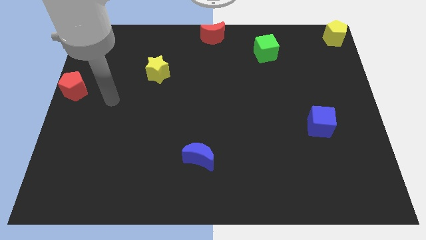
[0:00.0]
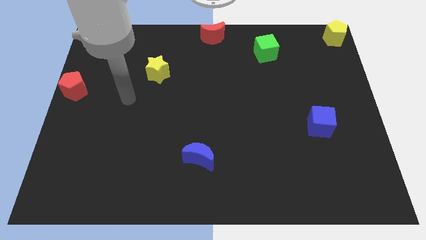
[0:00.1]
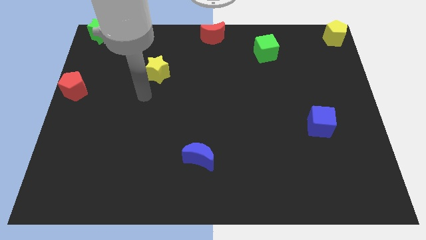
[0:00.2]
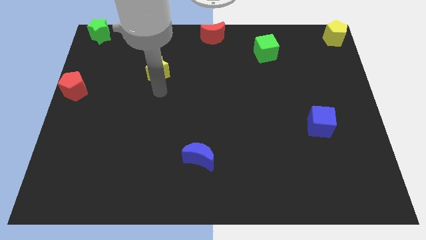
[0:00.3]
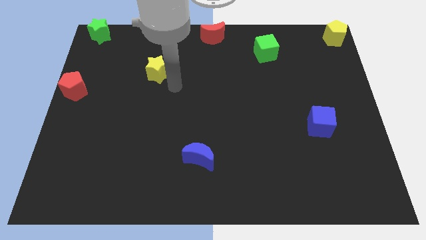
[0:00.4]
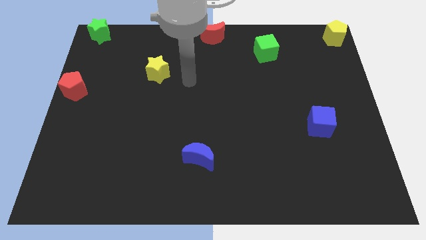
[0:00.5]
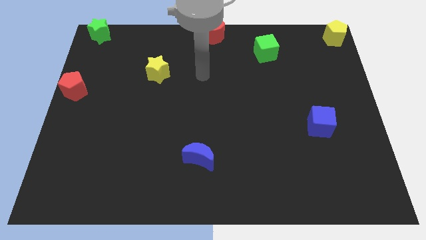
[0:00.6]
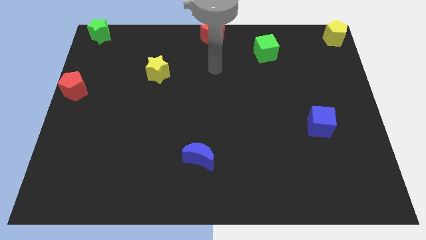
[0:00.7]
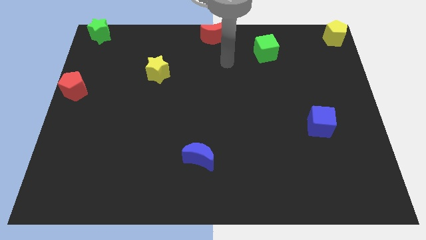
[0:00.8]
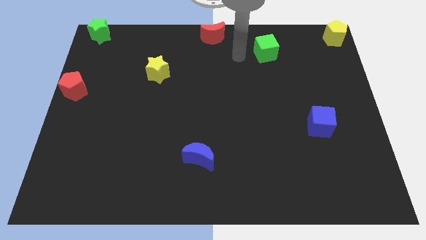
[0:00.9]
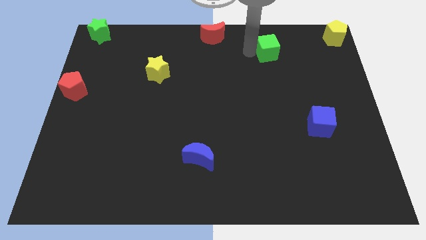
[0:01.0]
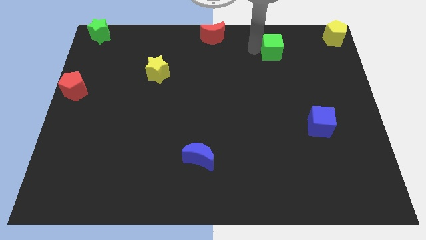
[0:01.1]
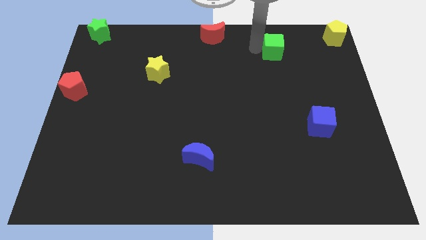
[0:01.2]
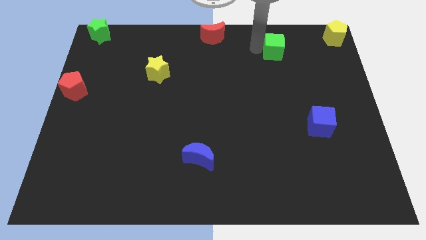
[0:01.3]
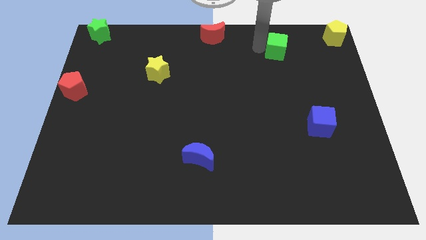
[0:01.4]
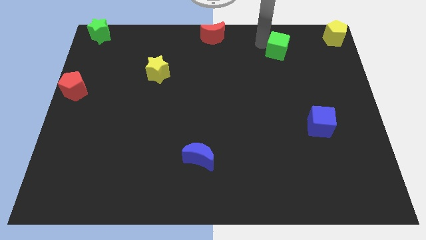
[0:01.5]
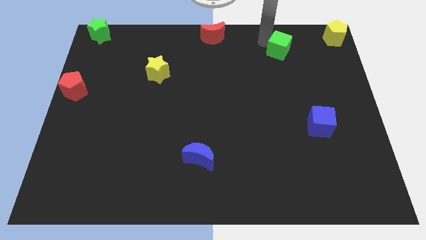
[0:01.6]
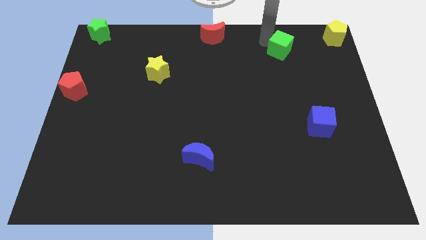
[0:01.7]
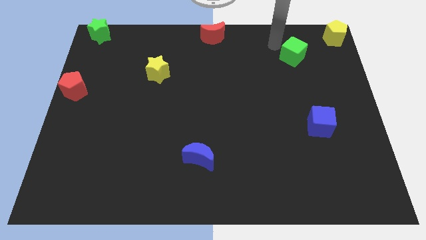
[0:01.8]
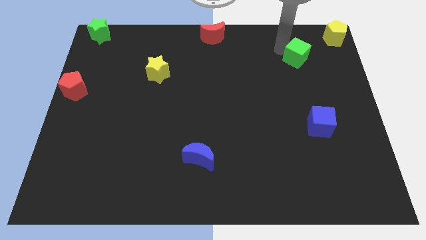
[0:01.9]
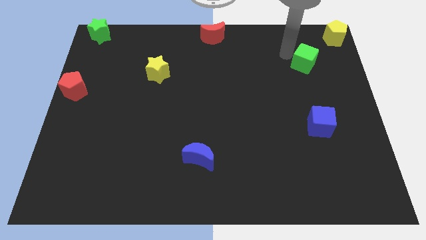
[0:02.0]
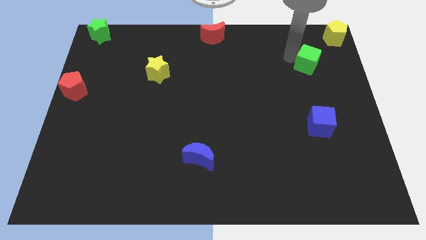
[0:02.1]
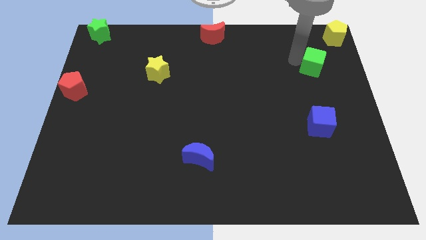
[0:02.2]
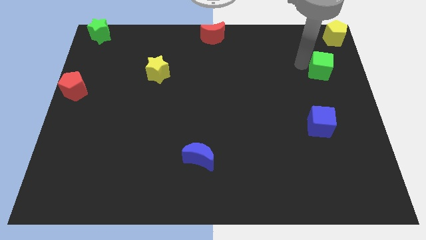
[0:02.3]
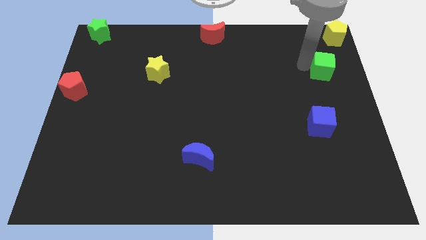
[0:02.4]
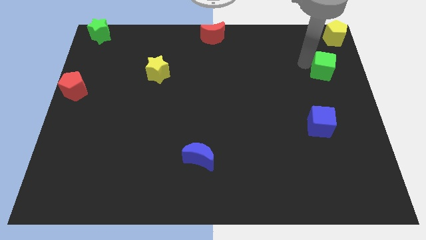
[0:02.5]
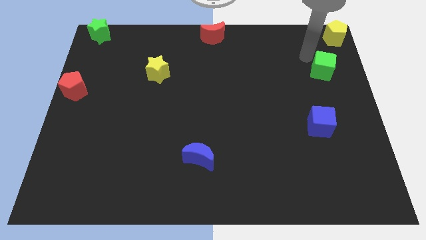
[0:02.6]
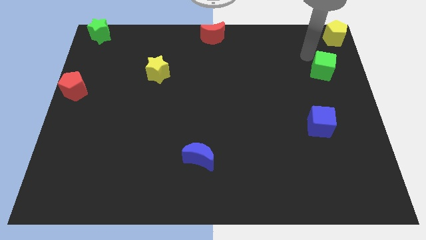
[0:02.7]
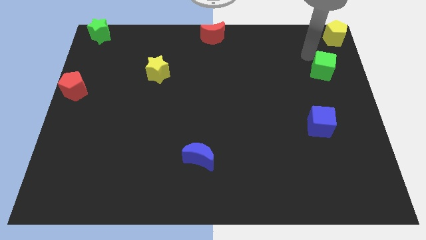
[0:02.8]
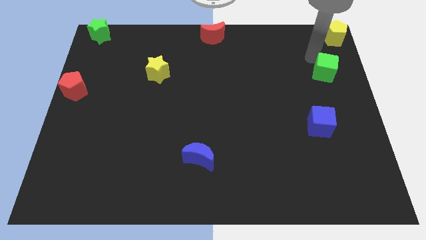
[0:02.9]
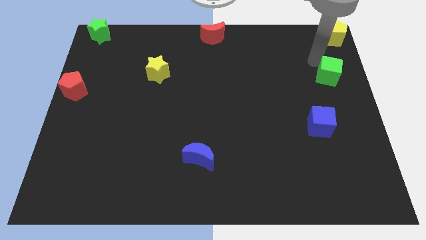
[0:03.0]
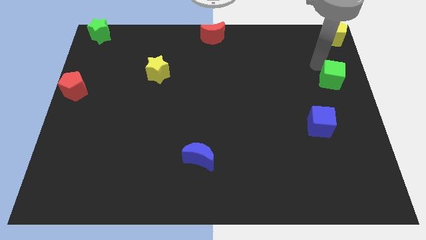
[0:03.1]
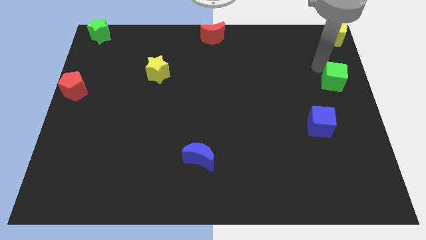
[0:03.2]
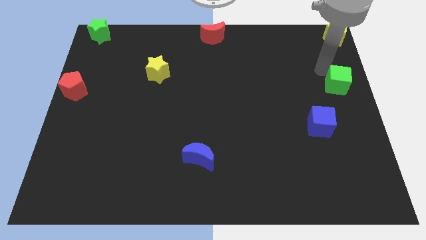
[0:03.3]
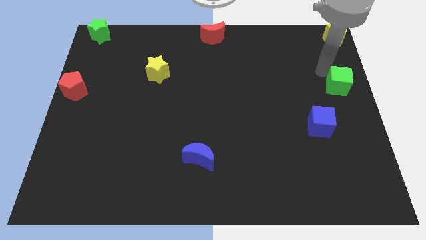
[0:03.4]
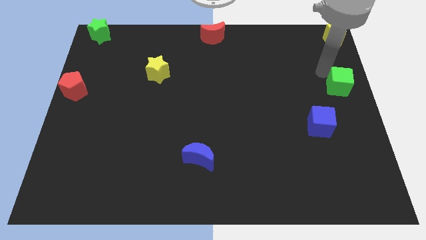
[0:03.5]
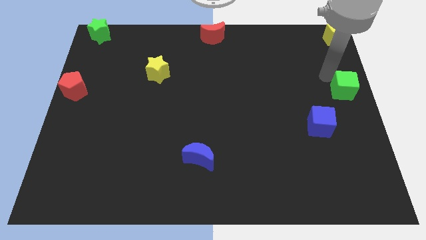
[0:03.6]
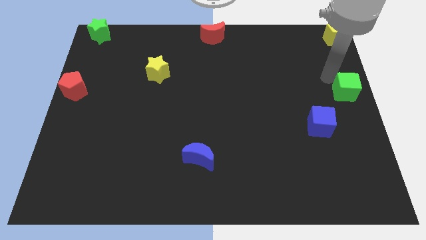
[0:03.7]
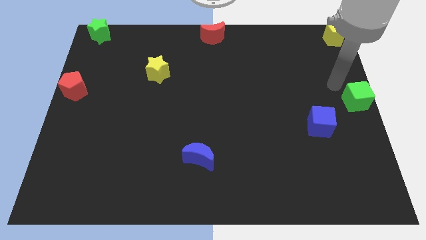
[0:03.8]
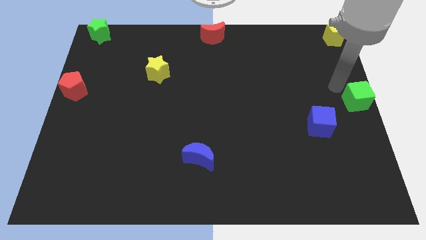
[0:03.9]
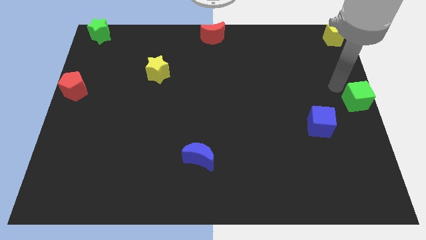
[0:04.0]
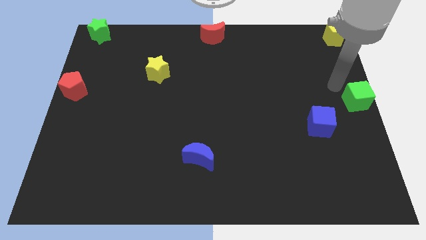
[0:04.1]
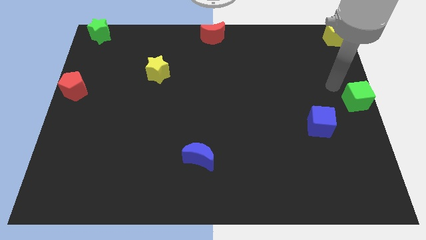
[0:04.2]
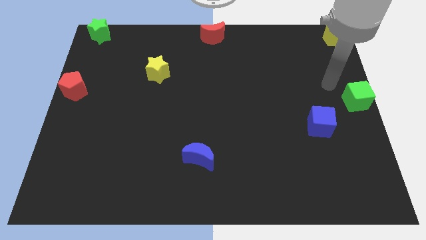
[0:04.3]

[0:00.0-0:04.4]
place the green cube at the center right side of the board

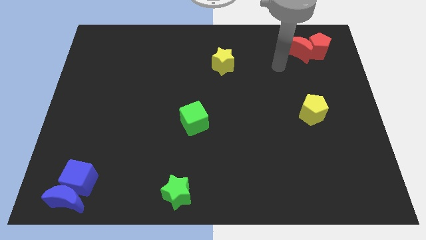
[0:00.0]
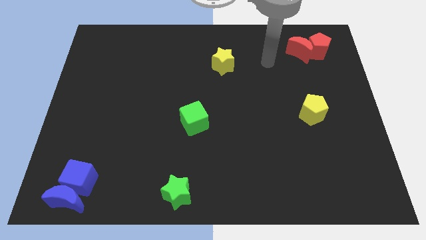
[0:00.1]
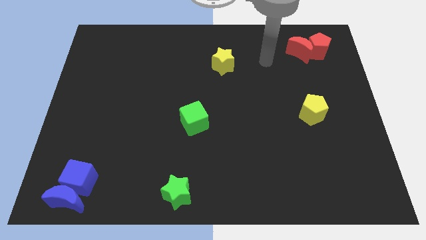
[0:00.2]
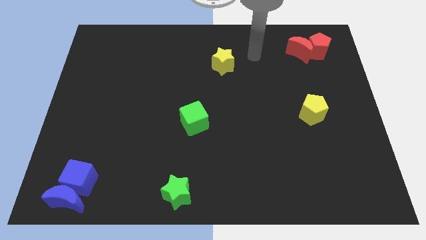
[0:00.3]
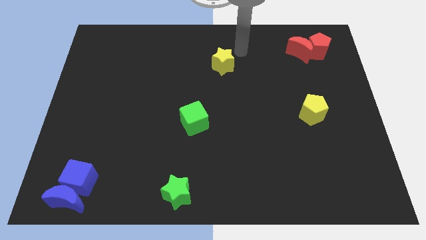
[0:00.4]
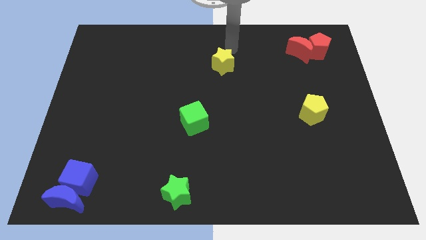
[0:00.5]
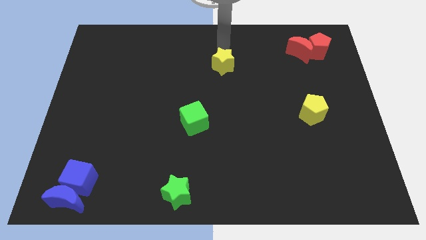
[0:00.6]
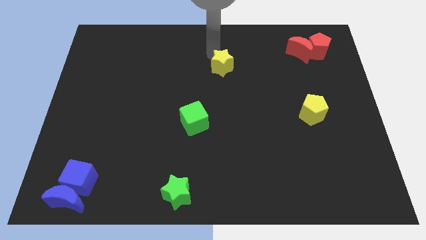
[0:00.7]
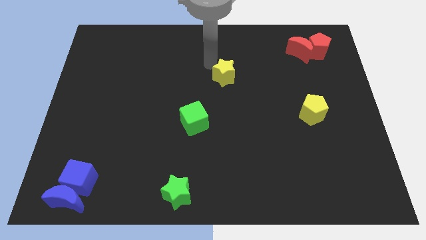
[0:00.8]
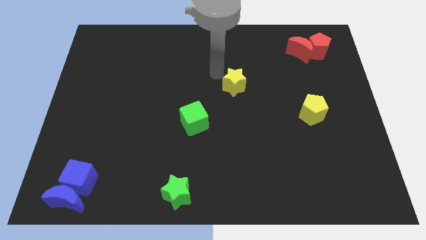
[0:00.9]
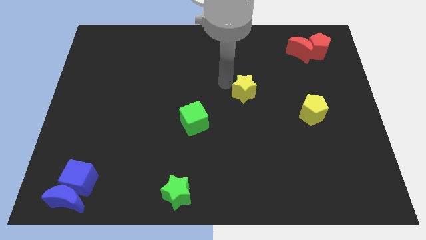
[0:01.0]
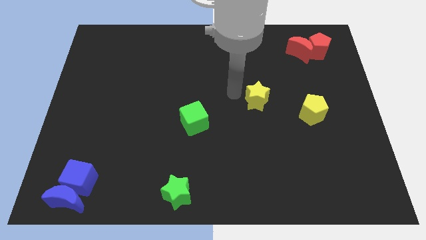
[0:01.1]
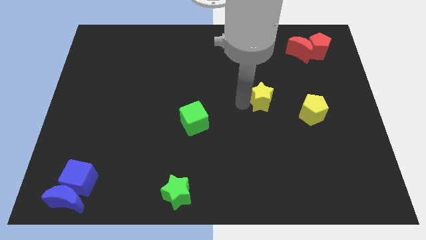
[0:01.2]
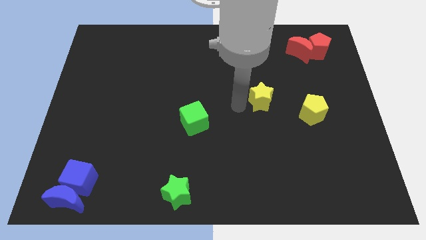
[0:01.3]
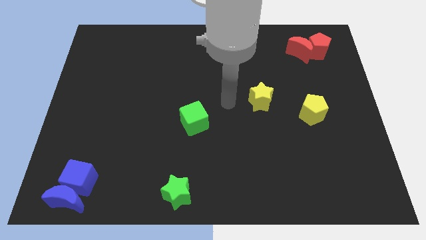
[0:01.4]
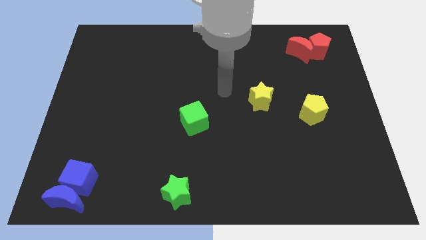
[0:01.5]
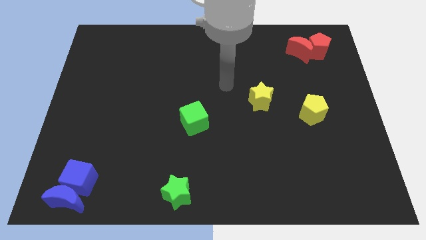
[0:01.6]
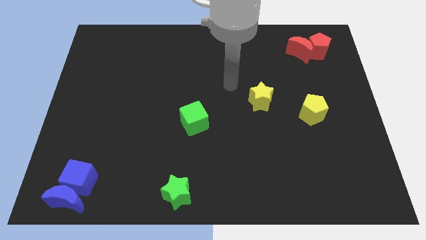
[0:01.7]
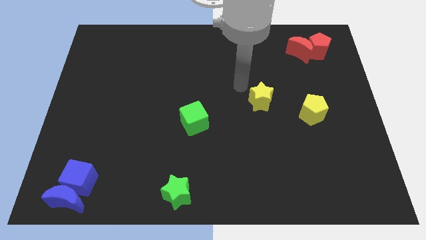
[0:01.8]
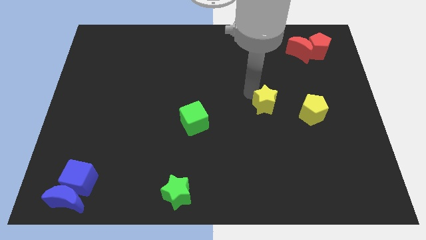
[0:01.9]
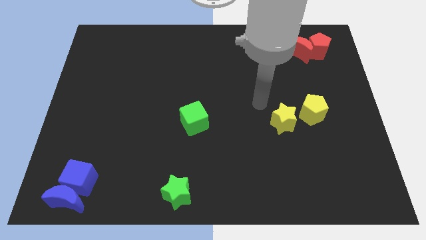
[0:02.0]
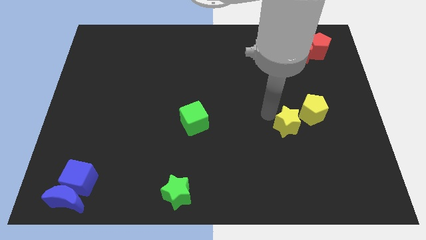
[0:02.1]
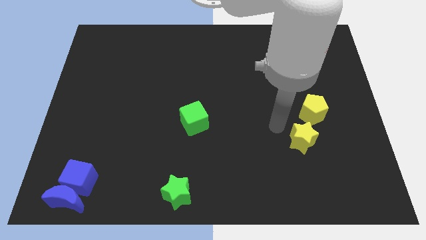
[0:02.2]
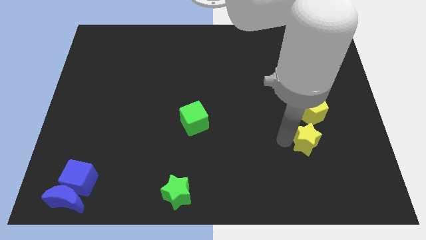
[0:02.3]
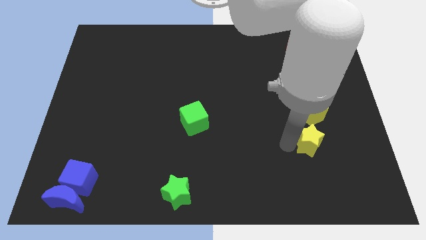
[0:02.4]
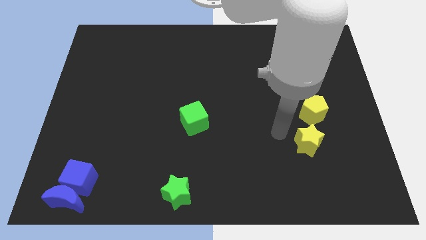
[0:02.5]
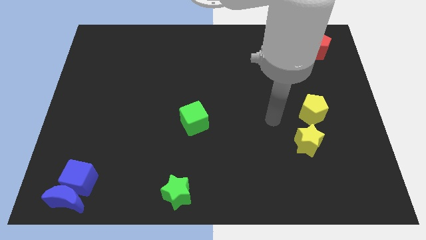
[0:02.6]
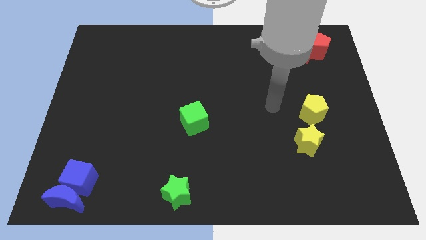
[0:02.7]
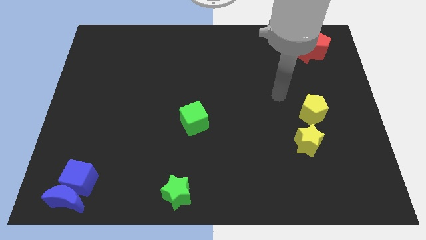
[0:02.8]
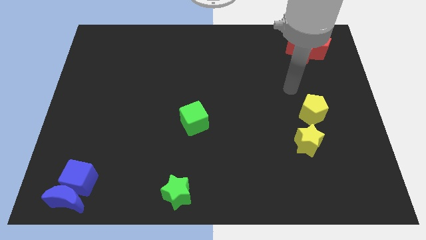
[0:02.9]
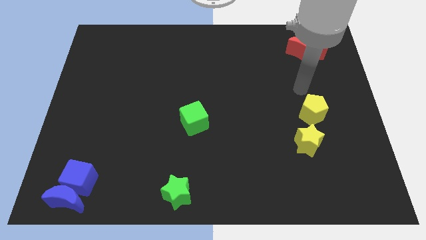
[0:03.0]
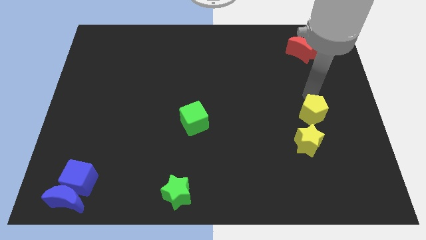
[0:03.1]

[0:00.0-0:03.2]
place the yellow star below the yellow pentagon

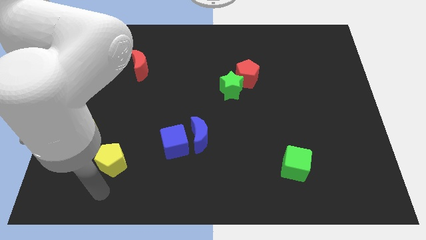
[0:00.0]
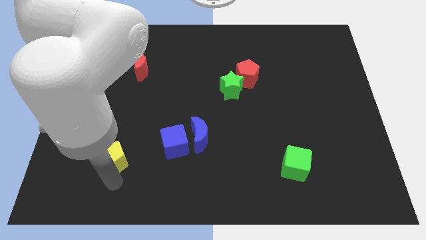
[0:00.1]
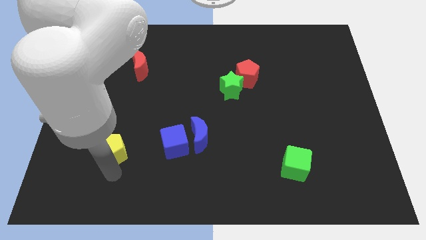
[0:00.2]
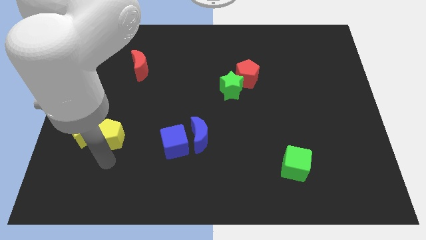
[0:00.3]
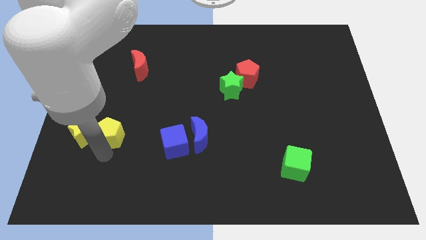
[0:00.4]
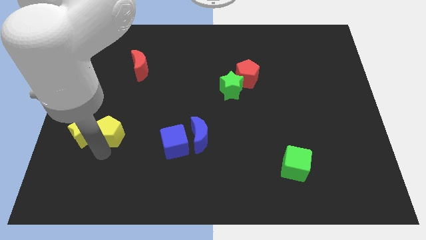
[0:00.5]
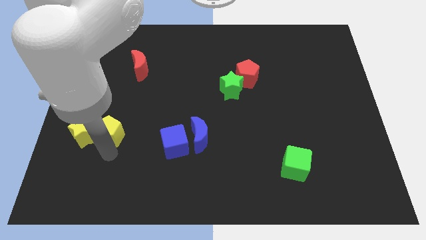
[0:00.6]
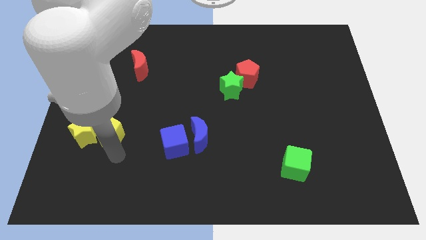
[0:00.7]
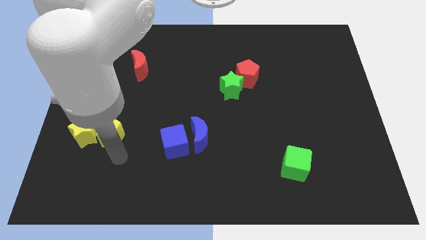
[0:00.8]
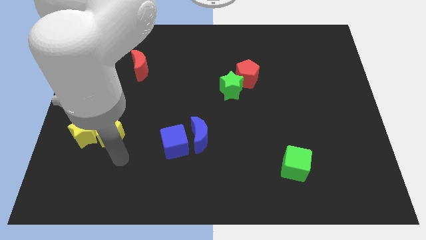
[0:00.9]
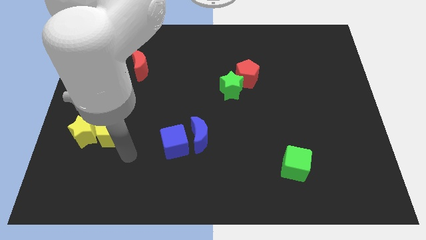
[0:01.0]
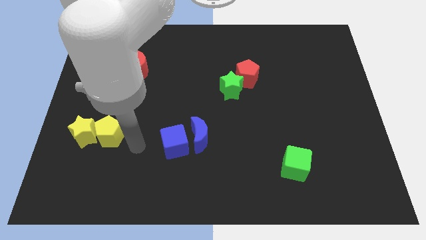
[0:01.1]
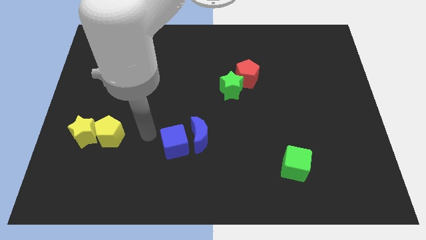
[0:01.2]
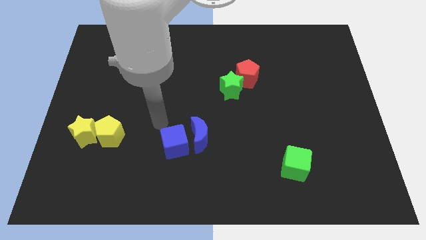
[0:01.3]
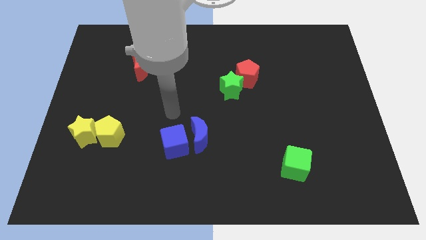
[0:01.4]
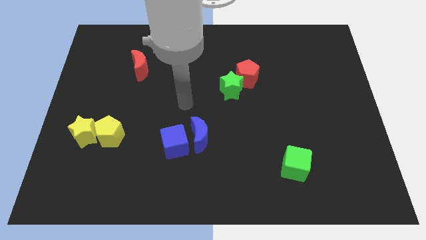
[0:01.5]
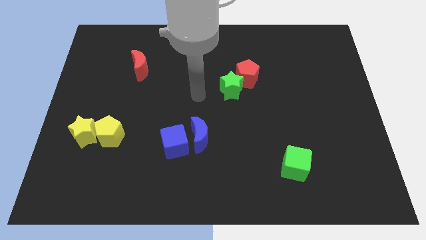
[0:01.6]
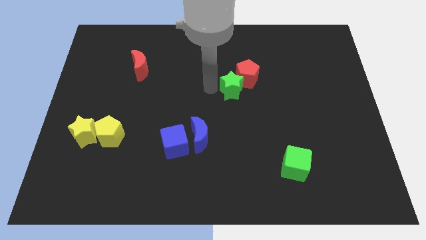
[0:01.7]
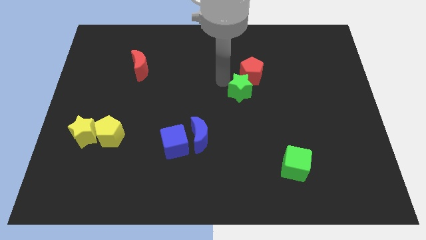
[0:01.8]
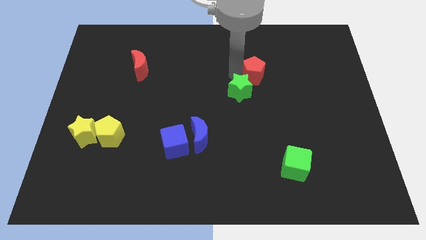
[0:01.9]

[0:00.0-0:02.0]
move your arm and slightly push the red pentagon
